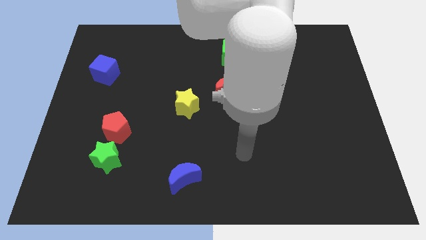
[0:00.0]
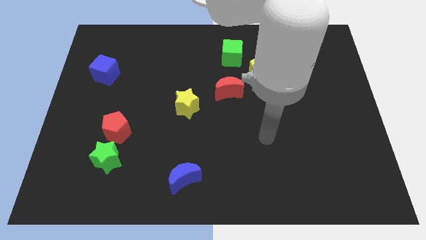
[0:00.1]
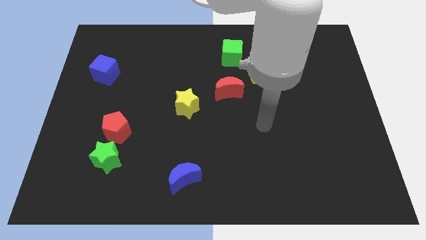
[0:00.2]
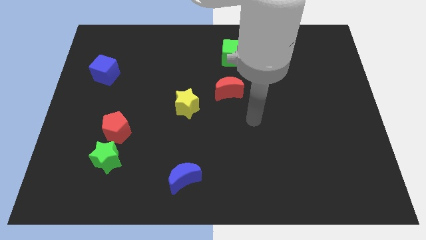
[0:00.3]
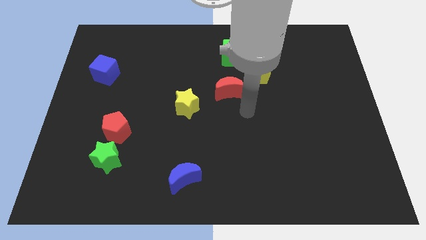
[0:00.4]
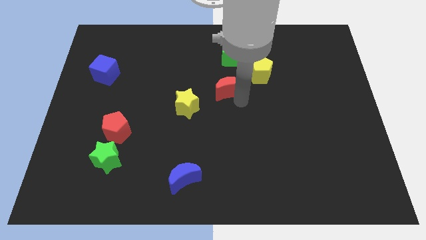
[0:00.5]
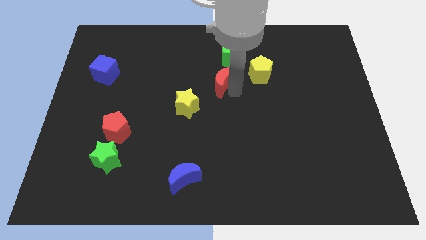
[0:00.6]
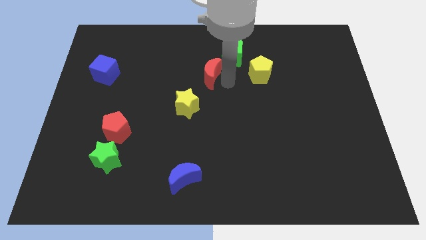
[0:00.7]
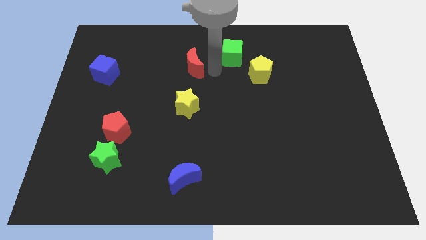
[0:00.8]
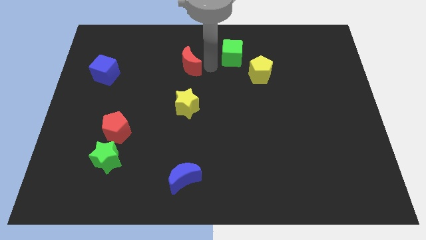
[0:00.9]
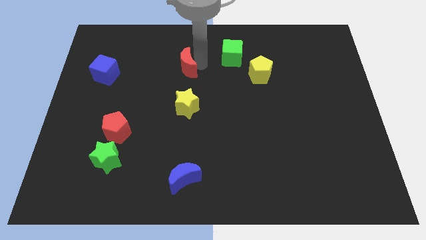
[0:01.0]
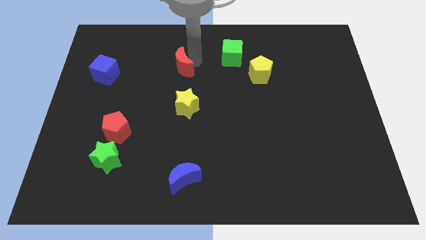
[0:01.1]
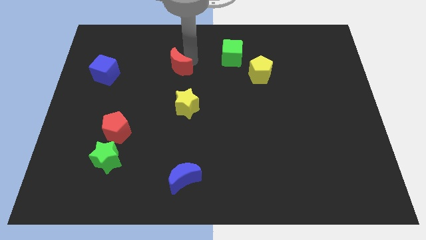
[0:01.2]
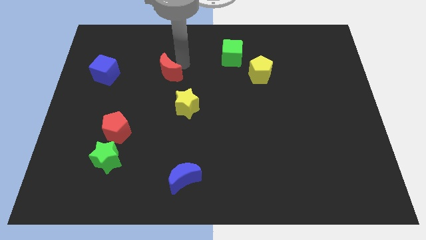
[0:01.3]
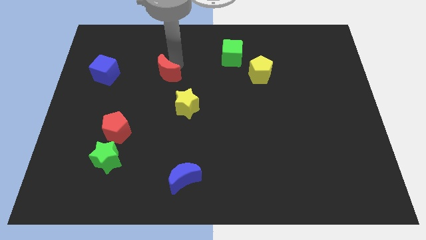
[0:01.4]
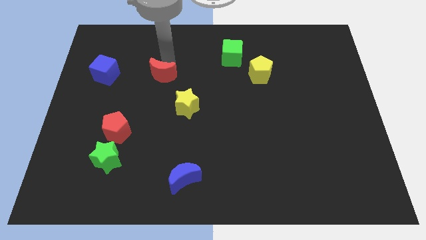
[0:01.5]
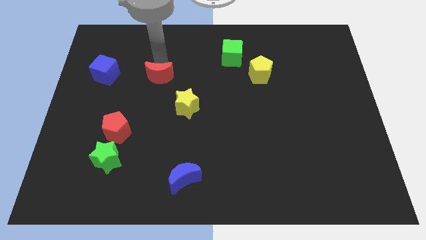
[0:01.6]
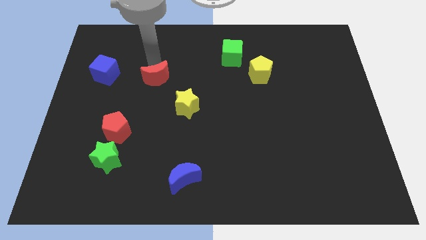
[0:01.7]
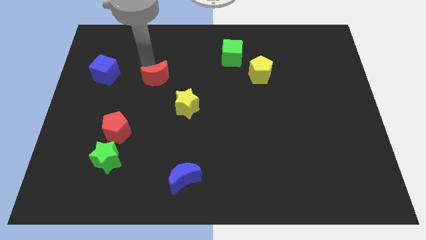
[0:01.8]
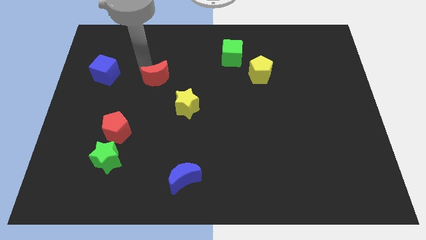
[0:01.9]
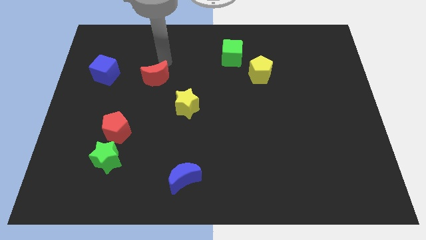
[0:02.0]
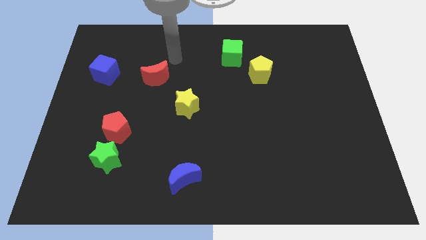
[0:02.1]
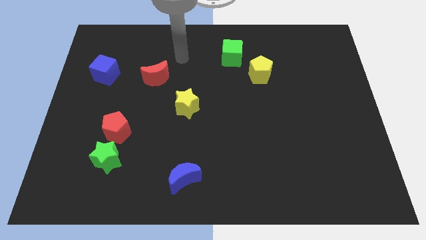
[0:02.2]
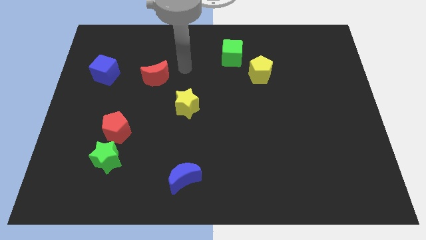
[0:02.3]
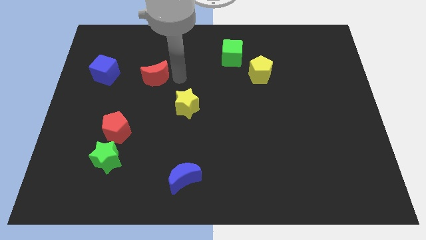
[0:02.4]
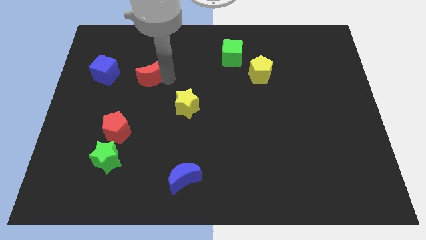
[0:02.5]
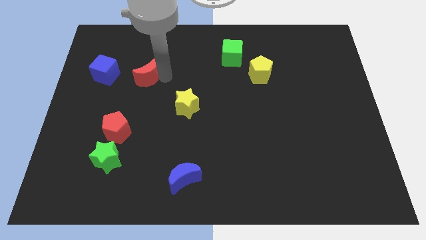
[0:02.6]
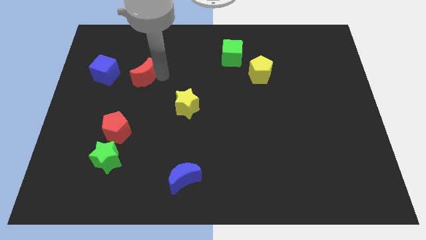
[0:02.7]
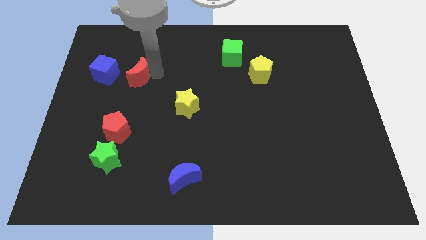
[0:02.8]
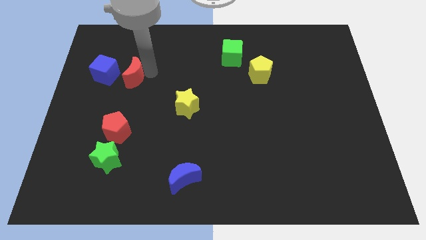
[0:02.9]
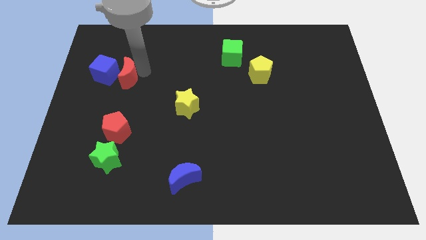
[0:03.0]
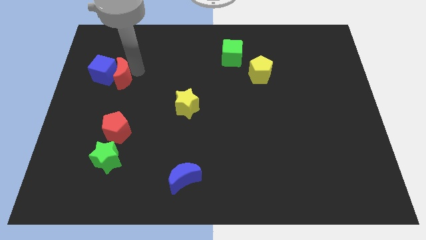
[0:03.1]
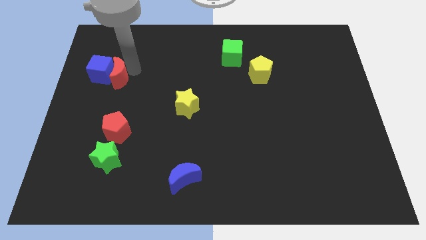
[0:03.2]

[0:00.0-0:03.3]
move the red moon to the blue cube

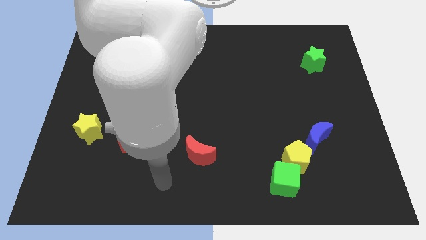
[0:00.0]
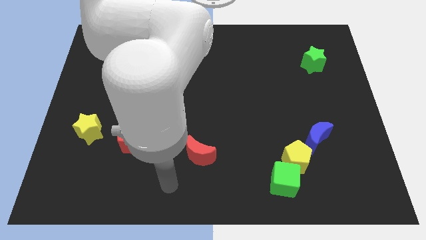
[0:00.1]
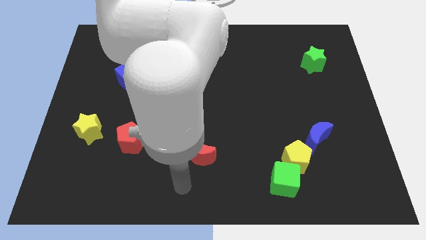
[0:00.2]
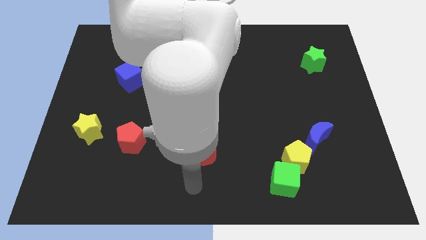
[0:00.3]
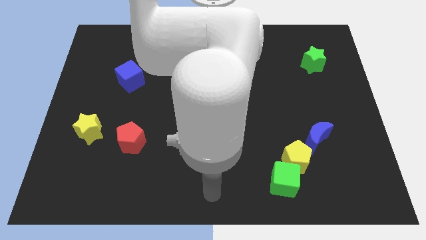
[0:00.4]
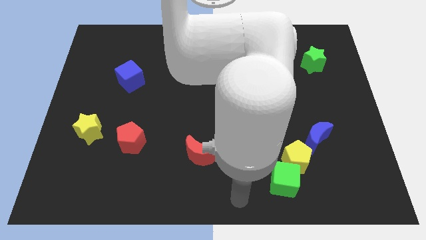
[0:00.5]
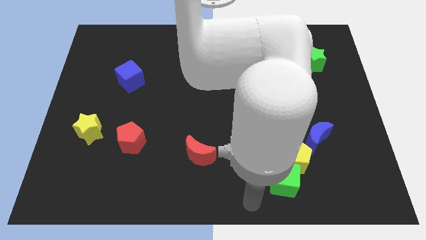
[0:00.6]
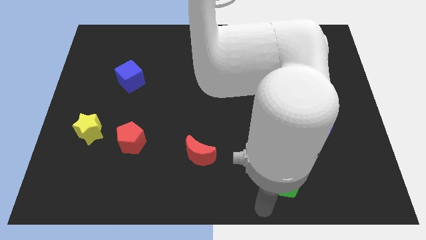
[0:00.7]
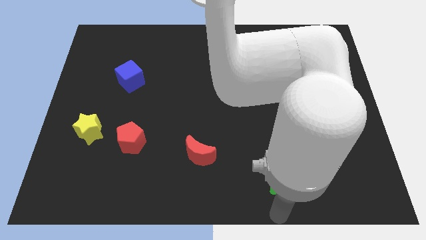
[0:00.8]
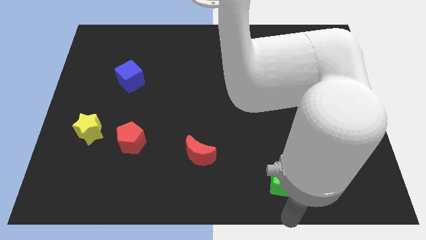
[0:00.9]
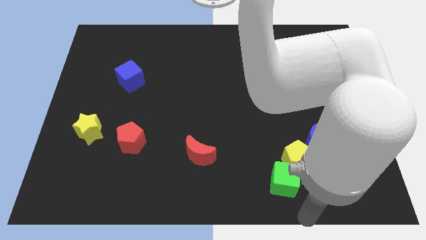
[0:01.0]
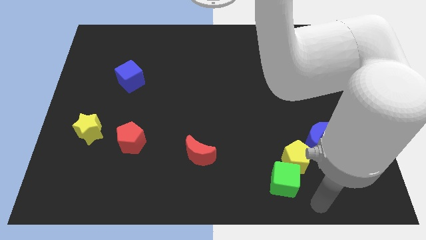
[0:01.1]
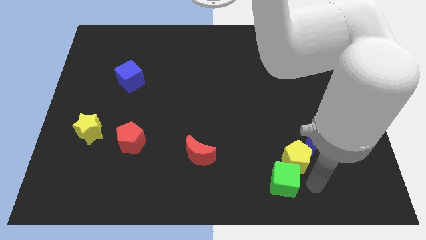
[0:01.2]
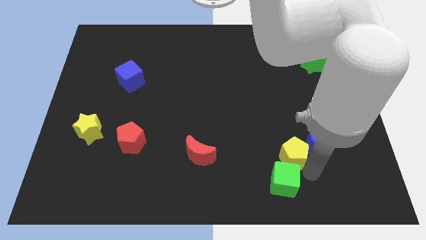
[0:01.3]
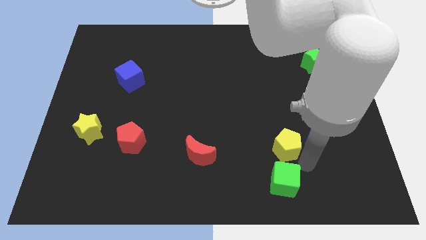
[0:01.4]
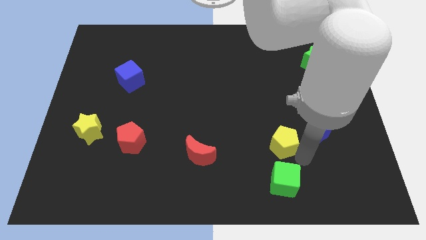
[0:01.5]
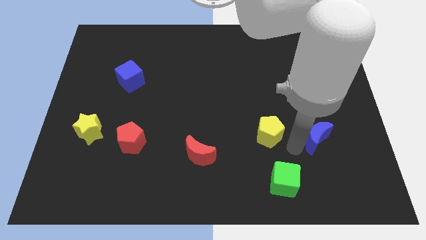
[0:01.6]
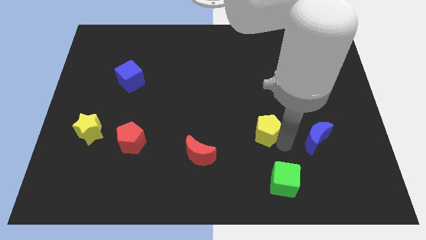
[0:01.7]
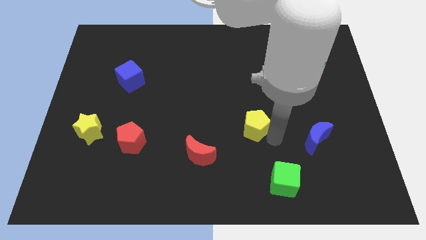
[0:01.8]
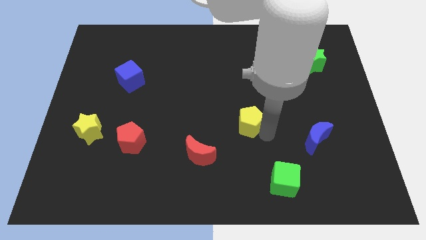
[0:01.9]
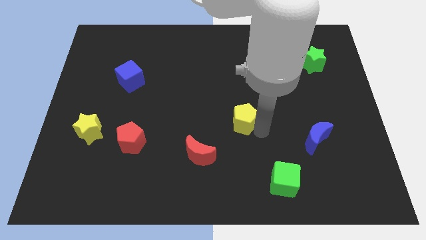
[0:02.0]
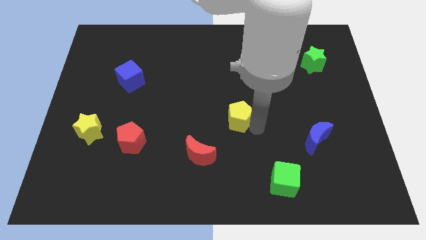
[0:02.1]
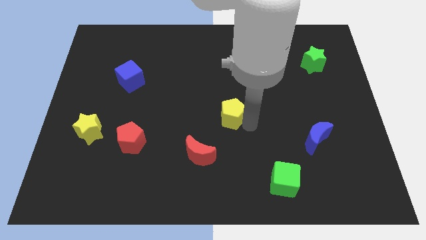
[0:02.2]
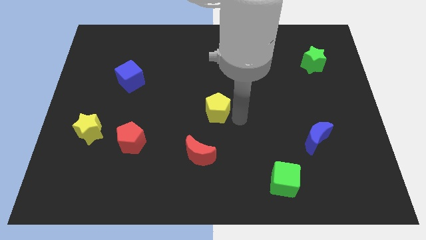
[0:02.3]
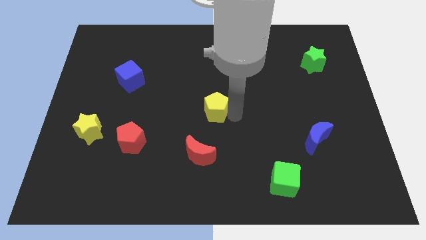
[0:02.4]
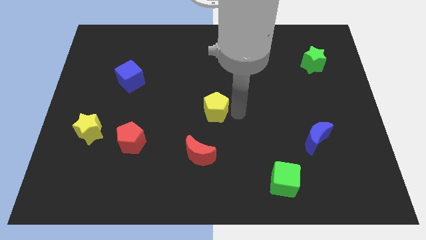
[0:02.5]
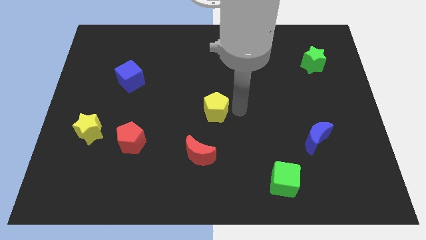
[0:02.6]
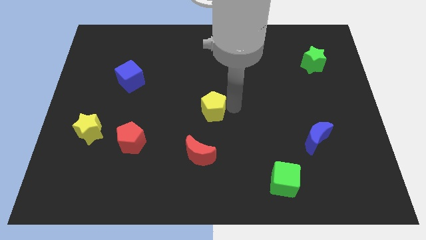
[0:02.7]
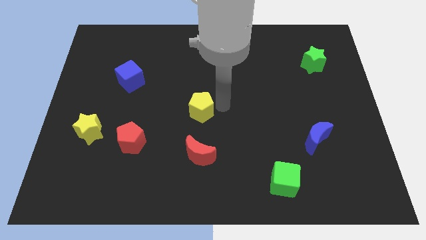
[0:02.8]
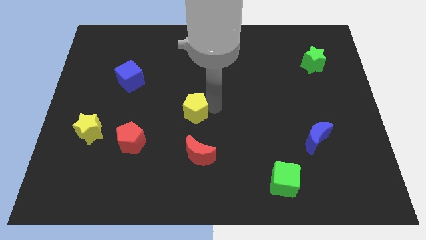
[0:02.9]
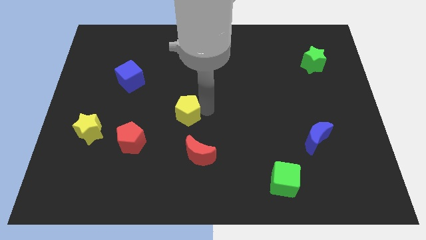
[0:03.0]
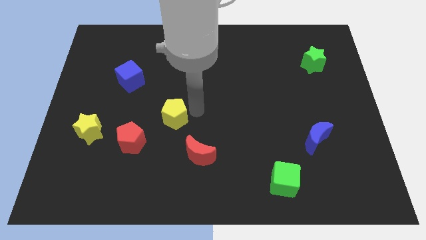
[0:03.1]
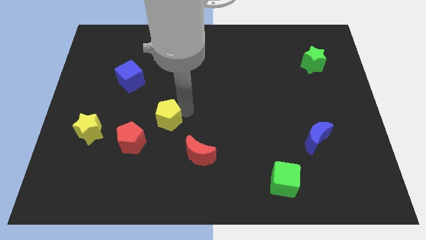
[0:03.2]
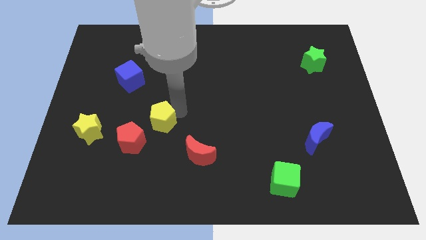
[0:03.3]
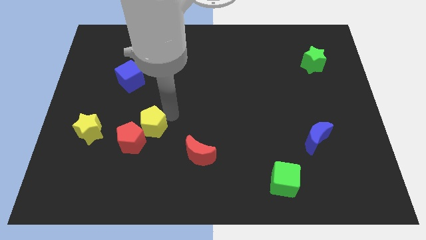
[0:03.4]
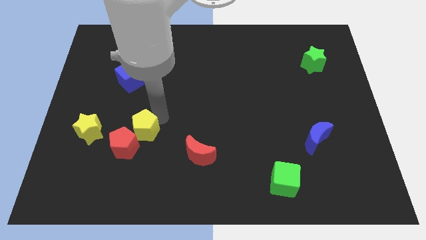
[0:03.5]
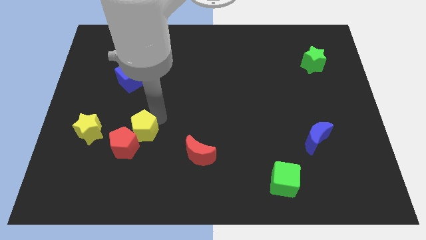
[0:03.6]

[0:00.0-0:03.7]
put the yellow pentagon next to the red pentagon

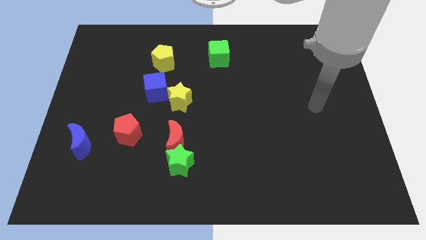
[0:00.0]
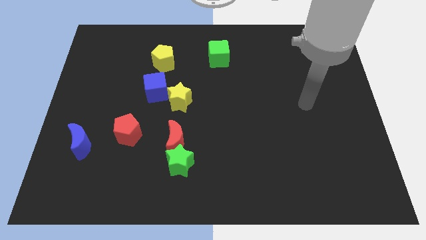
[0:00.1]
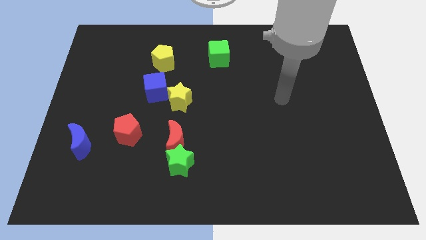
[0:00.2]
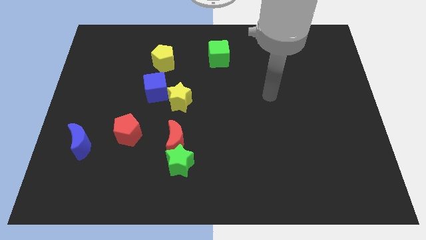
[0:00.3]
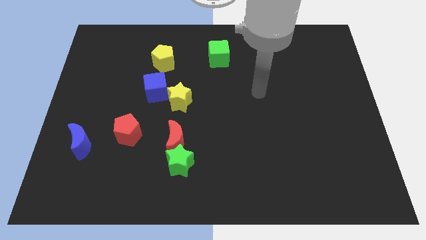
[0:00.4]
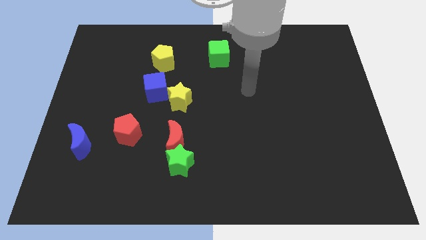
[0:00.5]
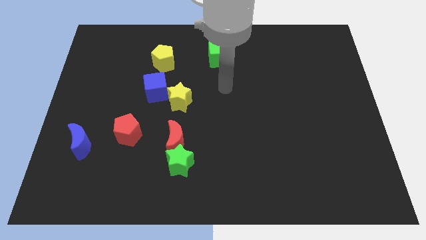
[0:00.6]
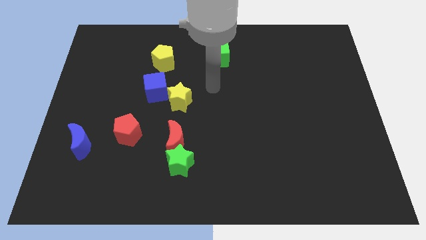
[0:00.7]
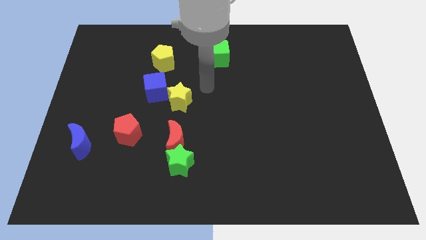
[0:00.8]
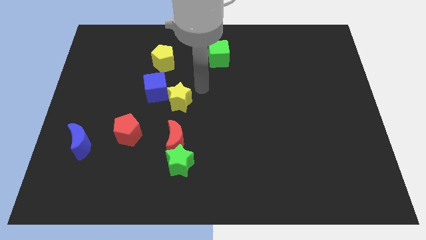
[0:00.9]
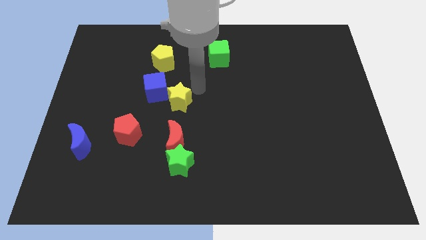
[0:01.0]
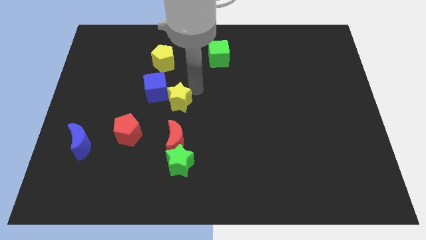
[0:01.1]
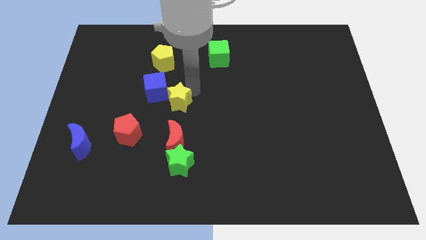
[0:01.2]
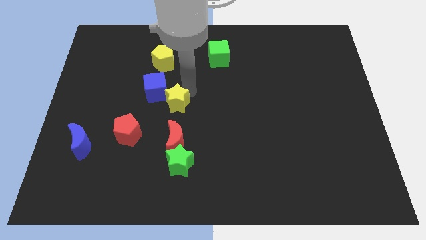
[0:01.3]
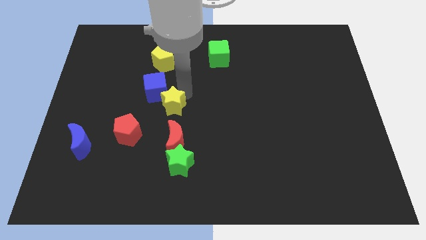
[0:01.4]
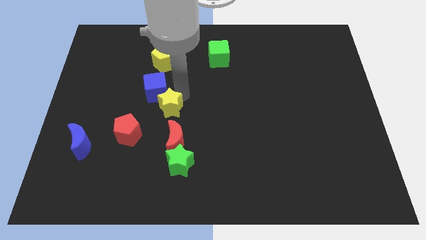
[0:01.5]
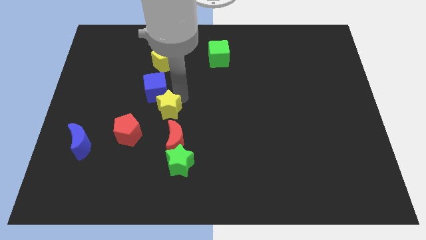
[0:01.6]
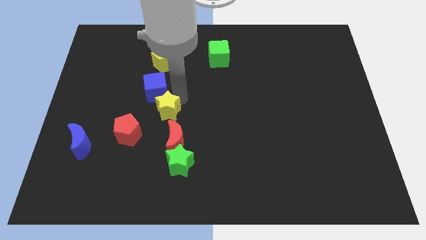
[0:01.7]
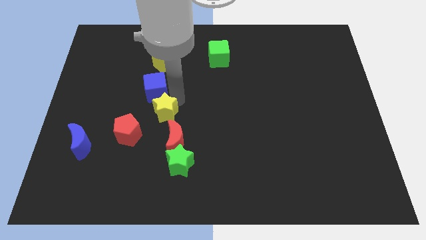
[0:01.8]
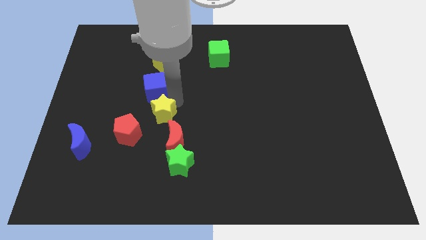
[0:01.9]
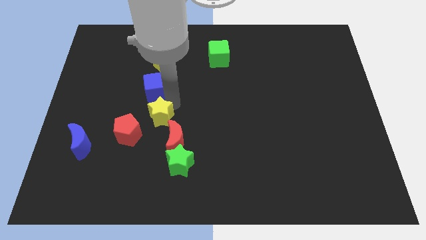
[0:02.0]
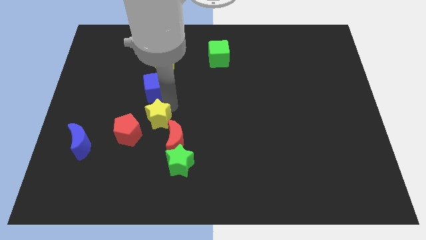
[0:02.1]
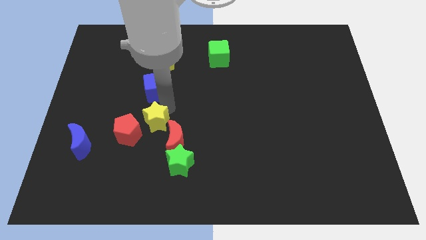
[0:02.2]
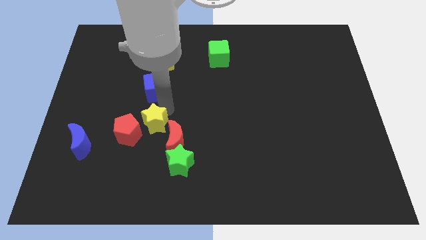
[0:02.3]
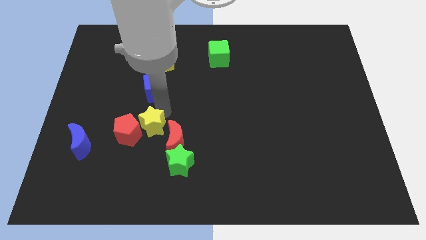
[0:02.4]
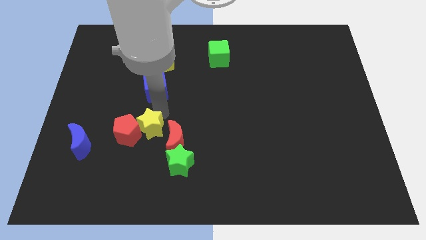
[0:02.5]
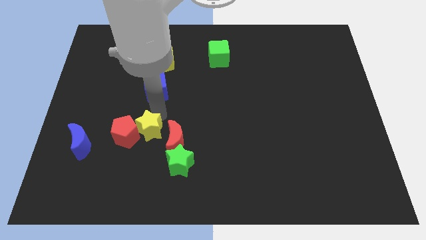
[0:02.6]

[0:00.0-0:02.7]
push the yellow star to the red pentagon
